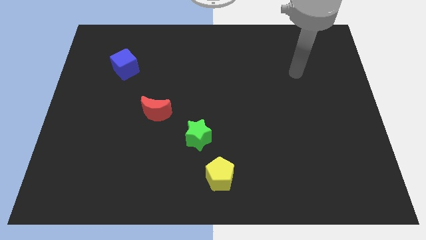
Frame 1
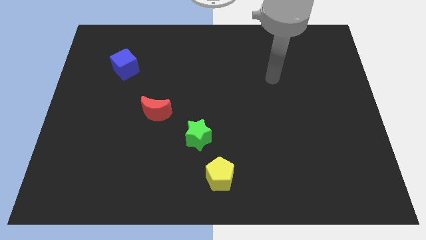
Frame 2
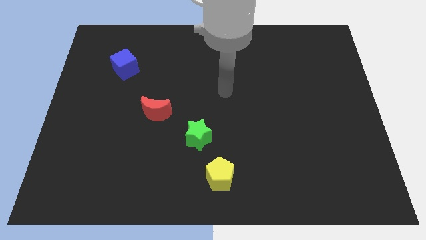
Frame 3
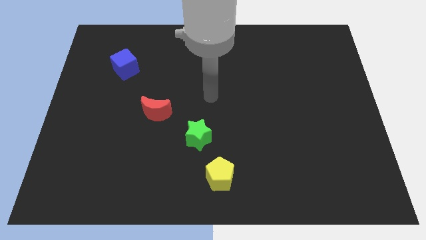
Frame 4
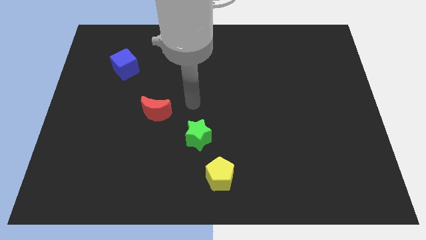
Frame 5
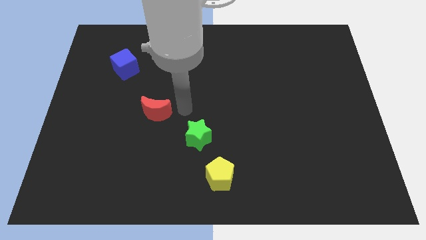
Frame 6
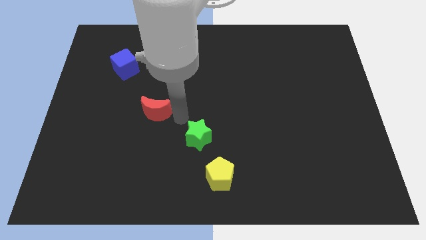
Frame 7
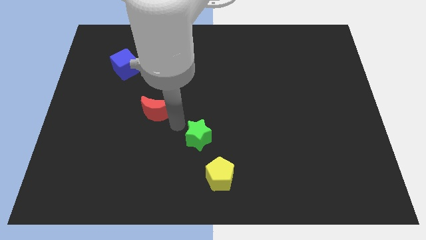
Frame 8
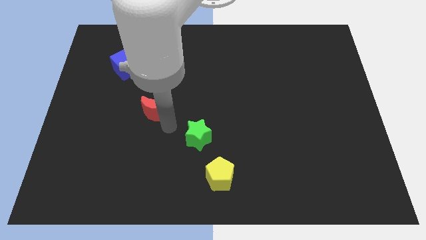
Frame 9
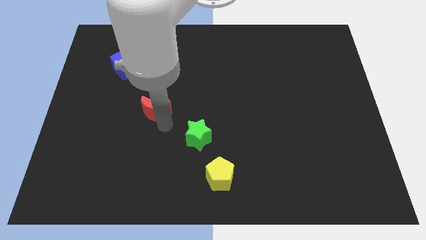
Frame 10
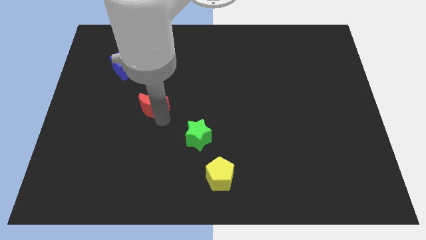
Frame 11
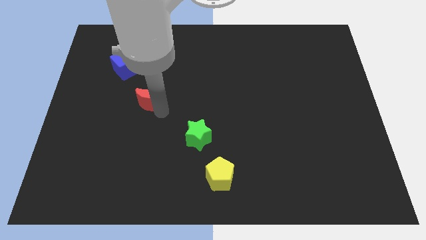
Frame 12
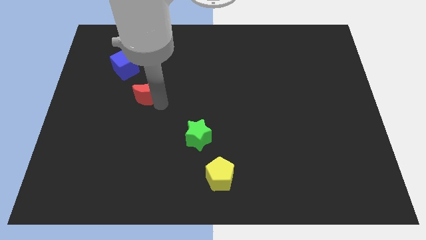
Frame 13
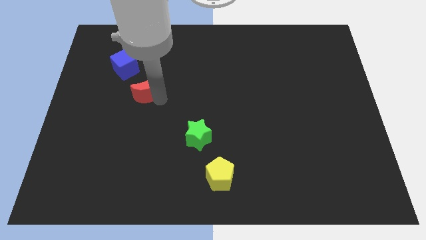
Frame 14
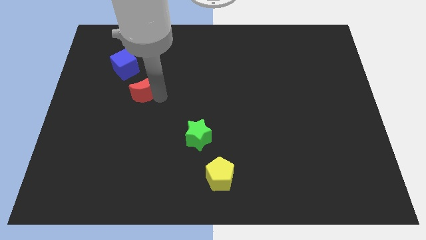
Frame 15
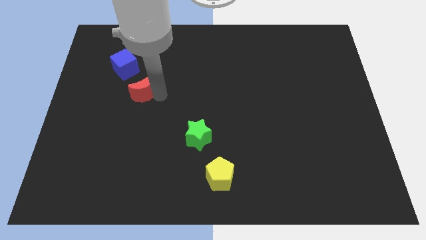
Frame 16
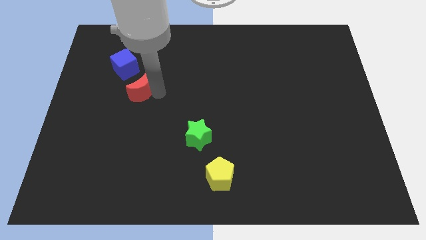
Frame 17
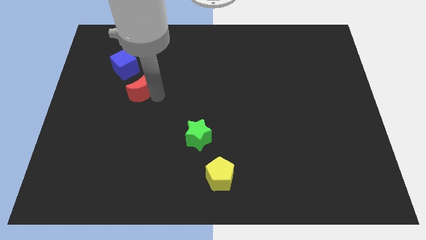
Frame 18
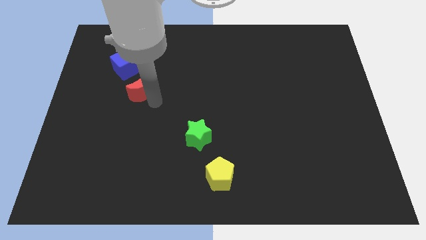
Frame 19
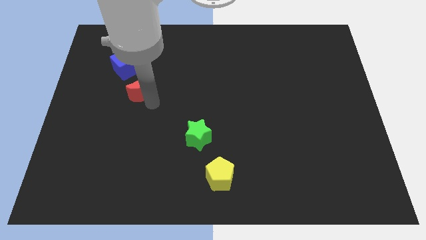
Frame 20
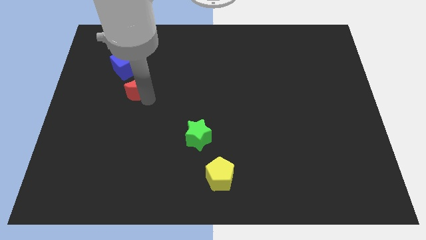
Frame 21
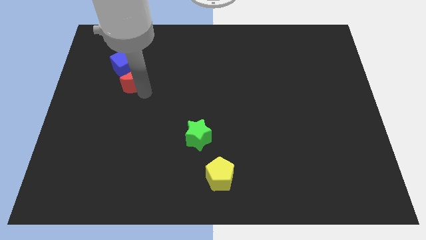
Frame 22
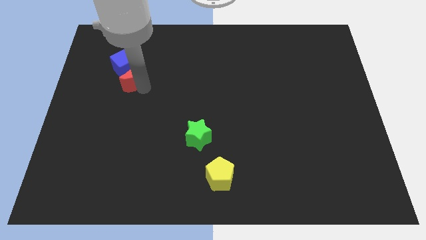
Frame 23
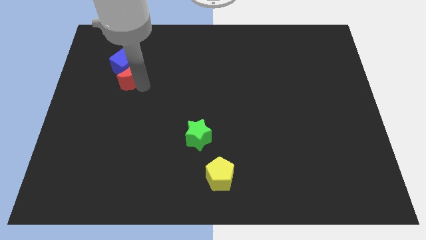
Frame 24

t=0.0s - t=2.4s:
put the red block next to the blue cube

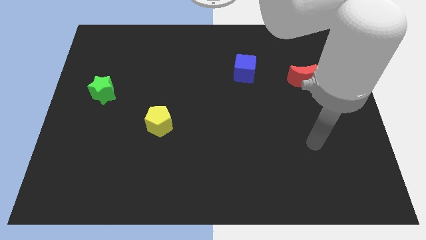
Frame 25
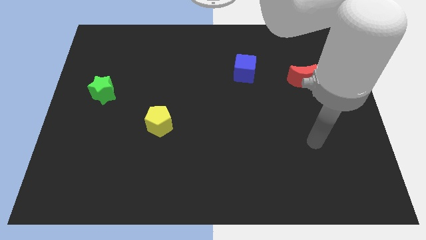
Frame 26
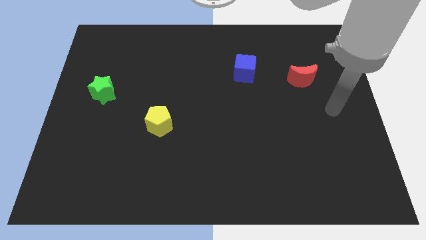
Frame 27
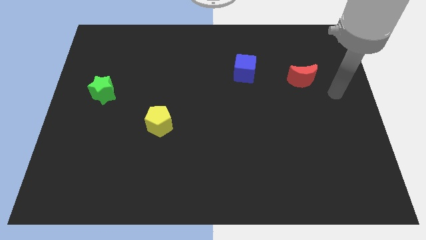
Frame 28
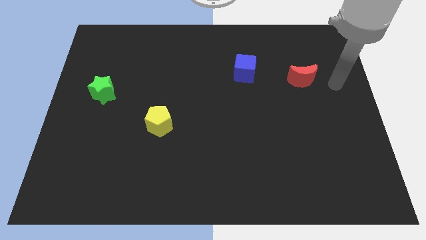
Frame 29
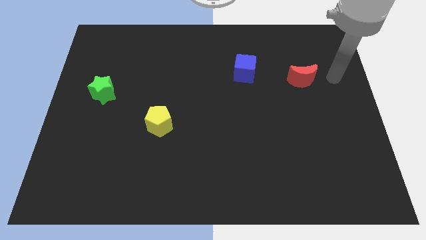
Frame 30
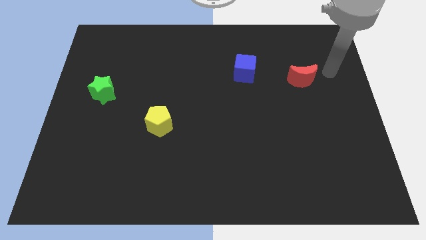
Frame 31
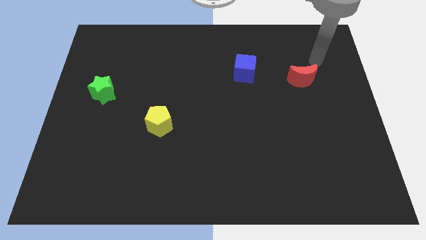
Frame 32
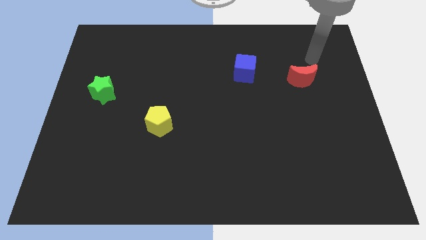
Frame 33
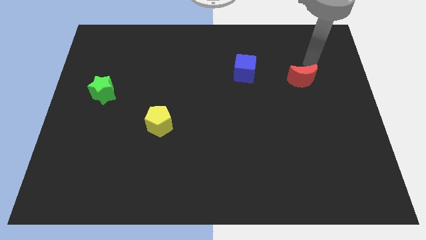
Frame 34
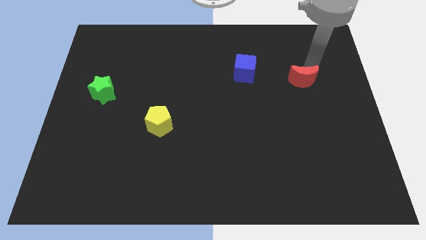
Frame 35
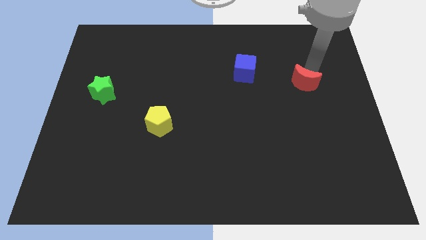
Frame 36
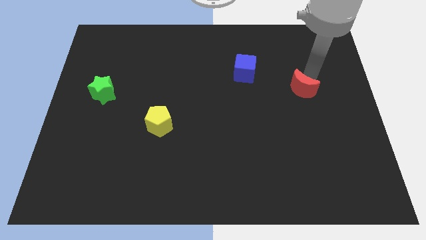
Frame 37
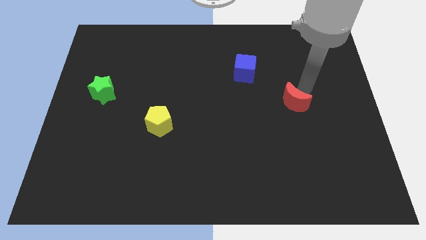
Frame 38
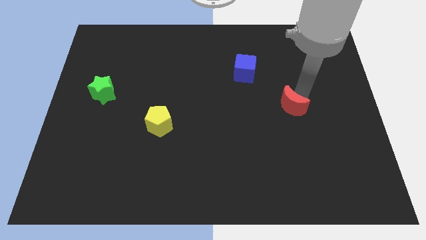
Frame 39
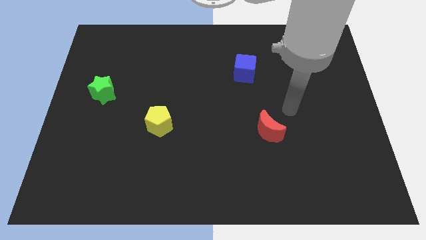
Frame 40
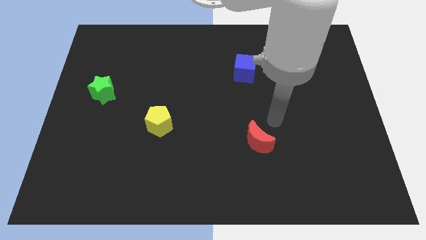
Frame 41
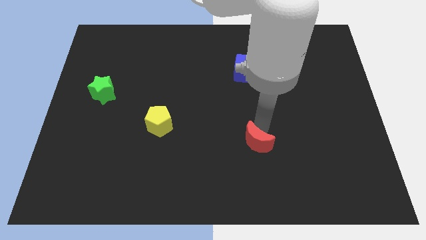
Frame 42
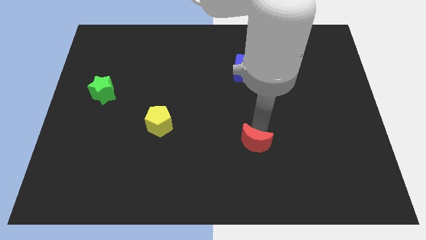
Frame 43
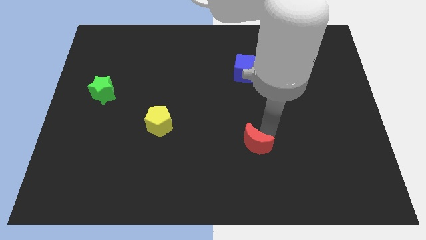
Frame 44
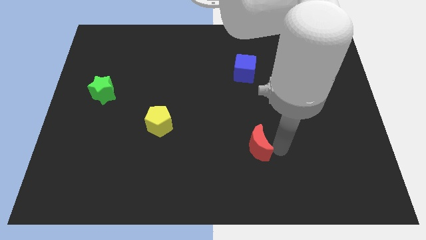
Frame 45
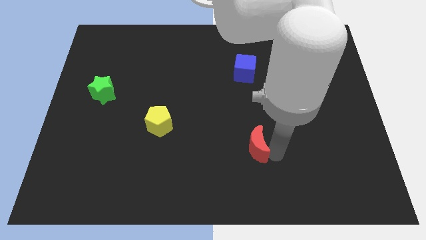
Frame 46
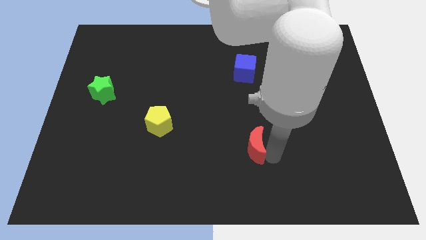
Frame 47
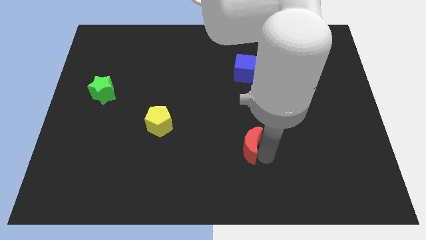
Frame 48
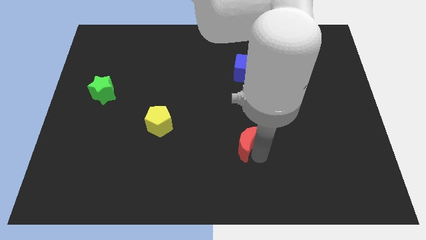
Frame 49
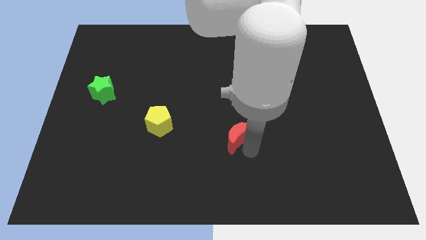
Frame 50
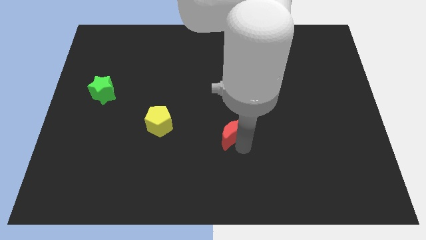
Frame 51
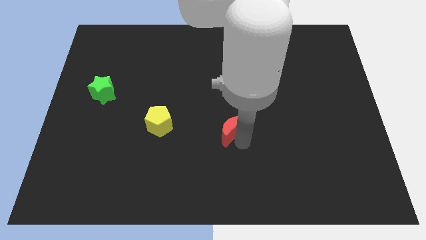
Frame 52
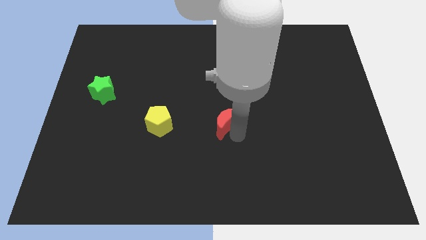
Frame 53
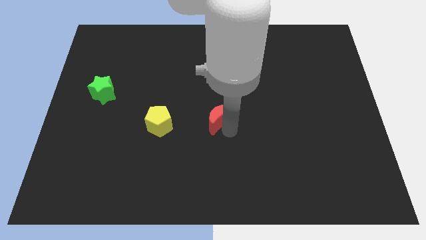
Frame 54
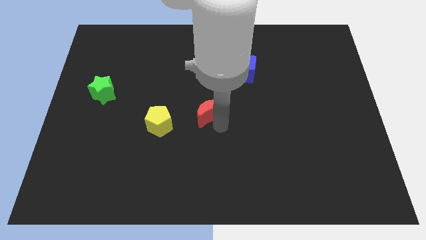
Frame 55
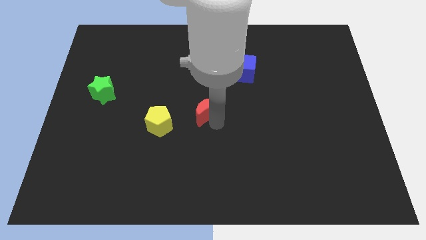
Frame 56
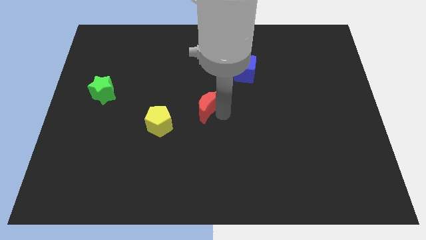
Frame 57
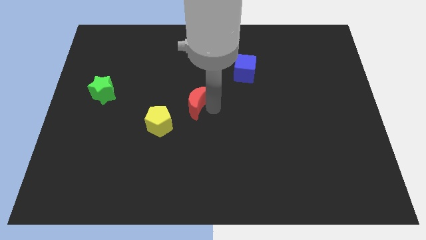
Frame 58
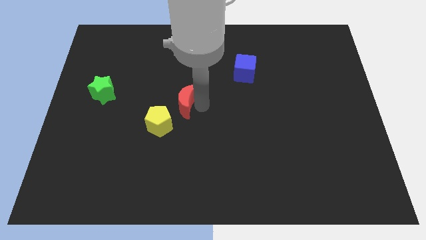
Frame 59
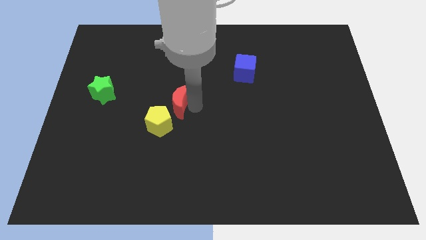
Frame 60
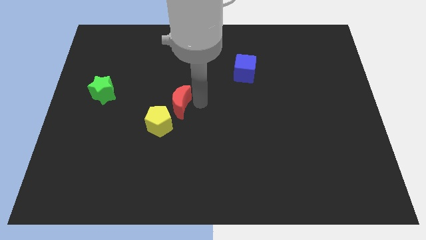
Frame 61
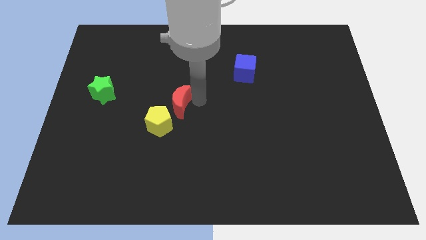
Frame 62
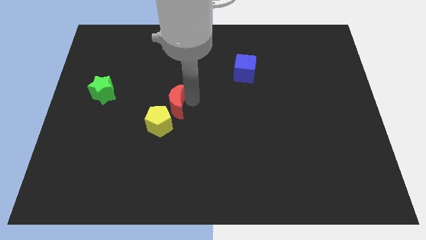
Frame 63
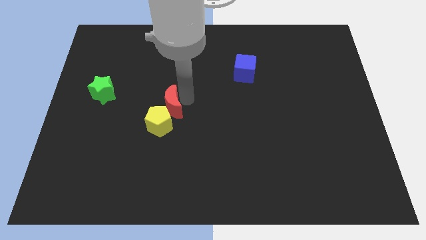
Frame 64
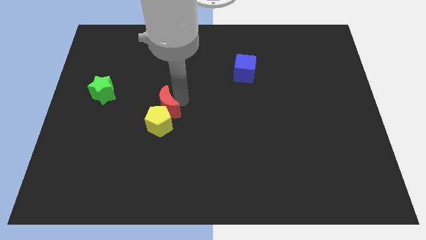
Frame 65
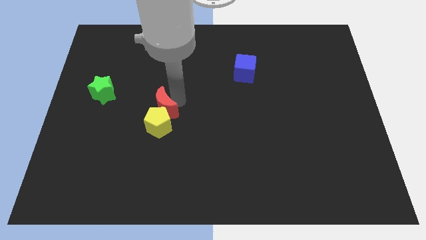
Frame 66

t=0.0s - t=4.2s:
move the moon towards the yellow block

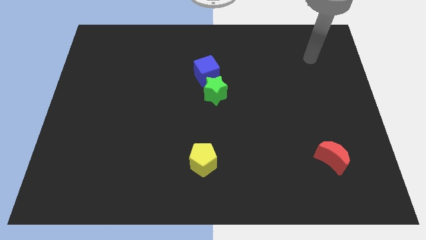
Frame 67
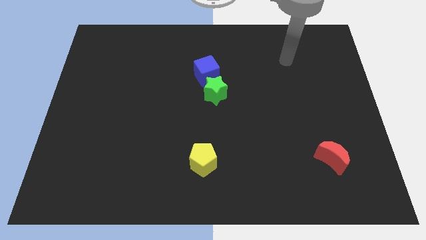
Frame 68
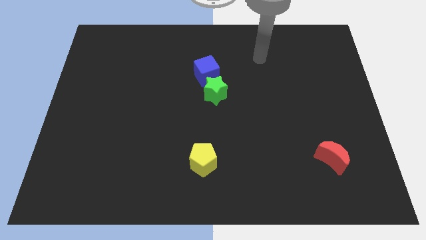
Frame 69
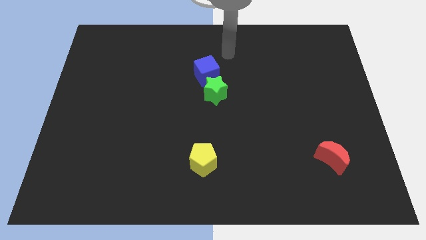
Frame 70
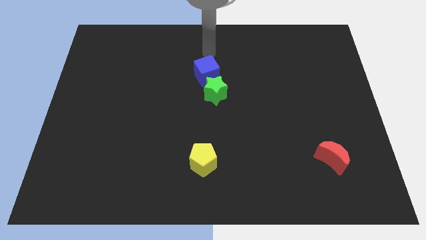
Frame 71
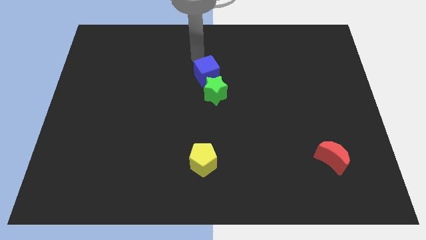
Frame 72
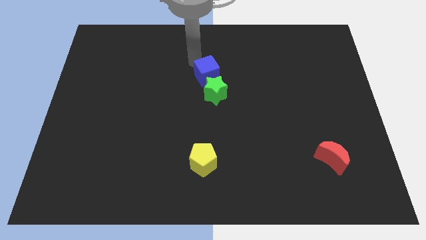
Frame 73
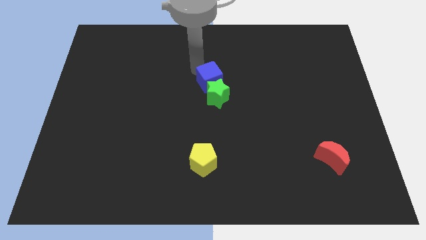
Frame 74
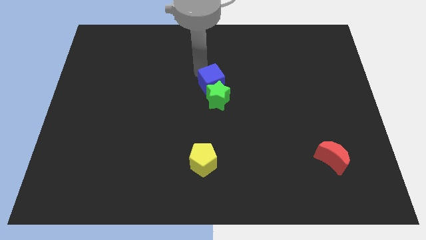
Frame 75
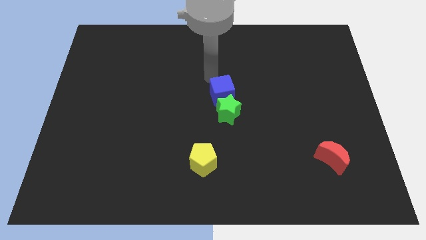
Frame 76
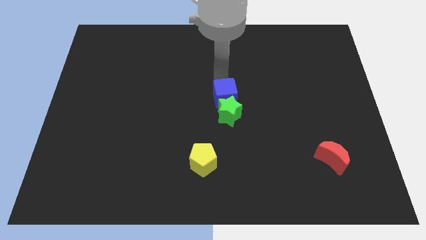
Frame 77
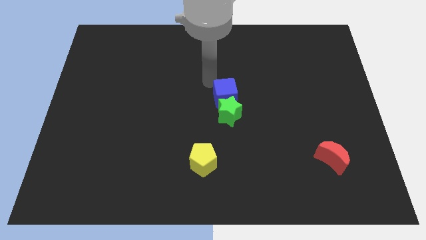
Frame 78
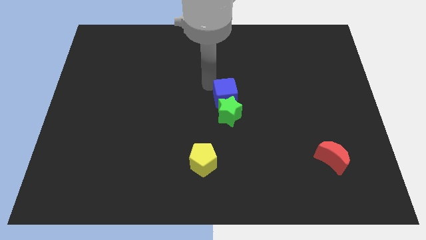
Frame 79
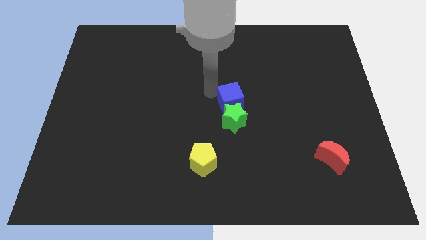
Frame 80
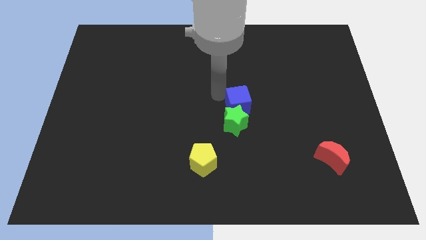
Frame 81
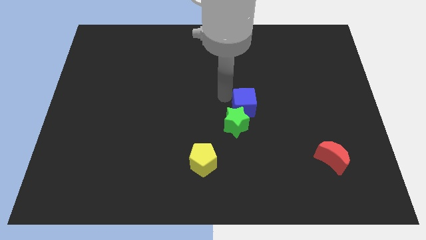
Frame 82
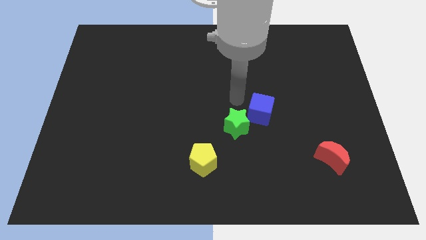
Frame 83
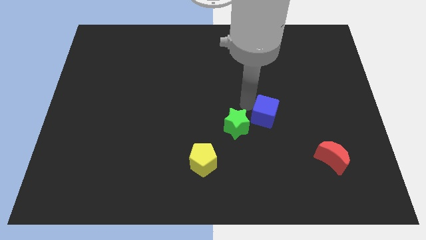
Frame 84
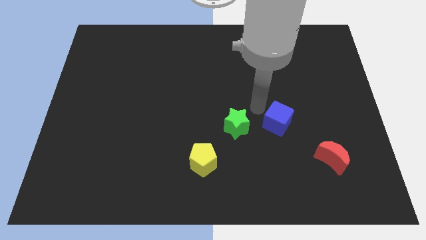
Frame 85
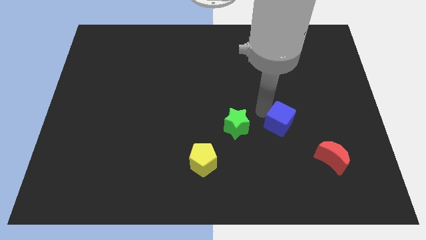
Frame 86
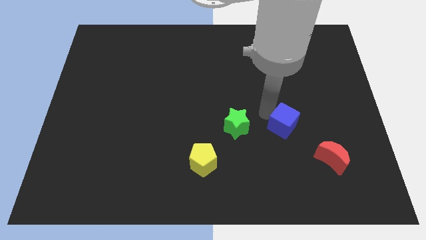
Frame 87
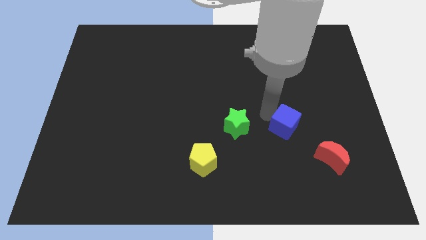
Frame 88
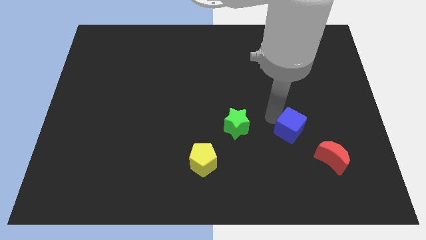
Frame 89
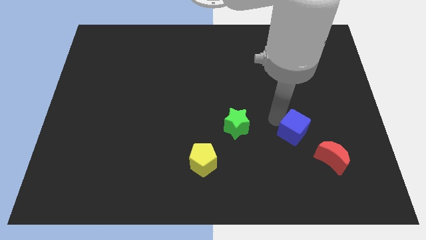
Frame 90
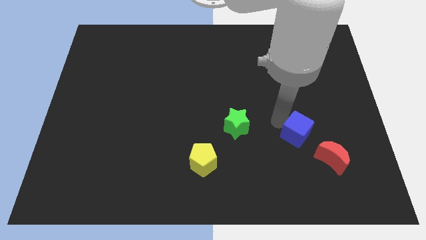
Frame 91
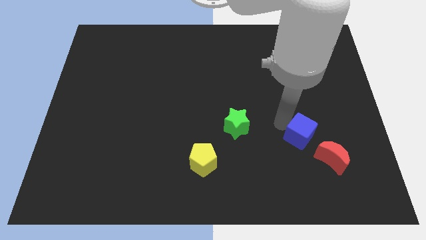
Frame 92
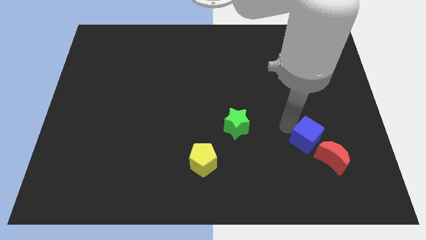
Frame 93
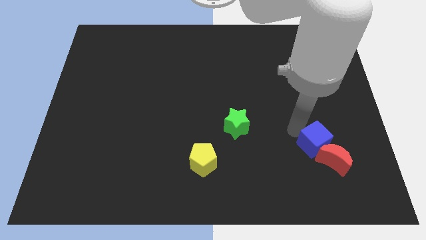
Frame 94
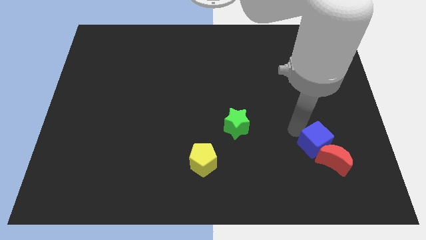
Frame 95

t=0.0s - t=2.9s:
slide the blue block close to the red moon
